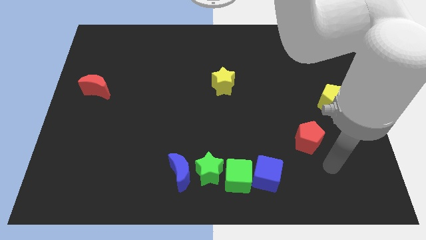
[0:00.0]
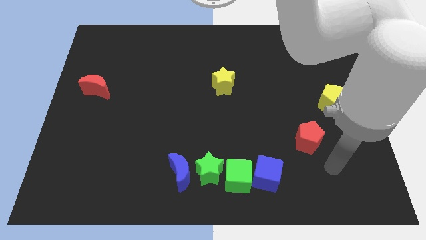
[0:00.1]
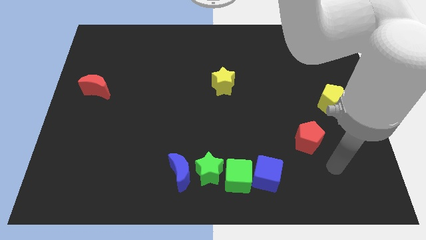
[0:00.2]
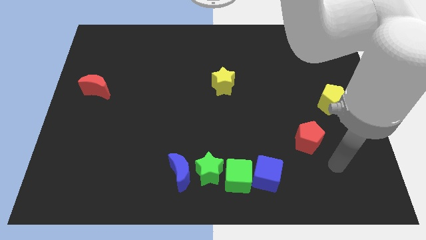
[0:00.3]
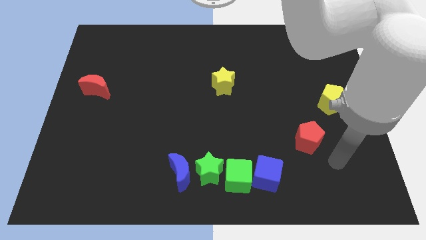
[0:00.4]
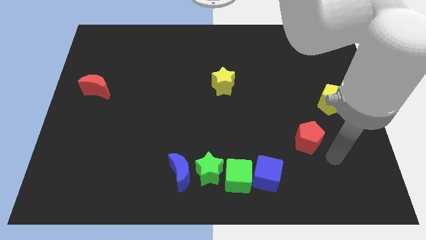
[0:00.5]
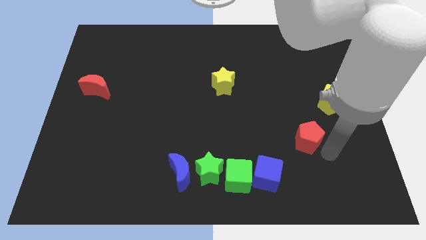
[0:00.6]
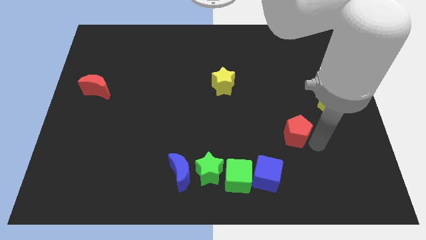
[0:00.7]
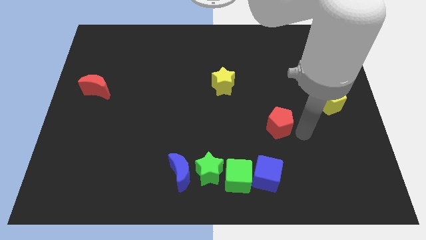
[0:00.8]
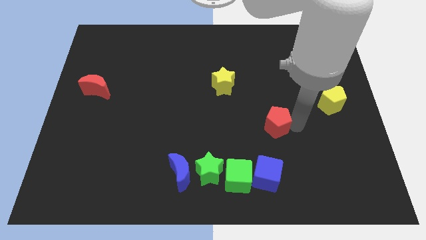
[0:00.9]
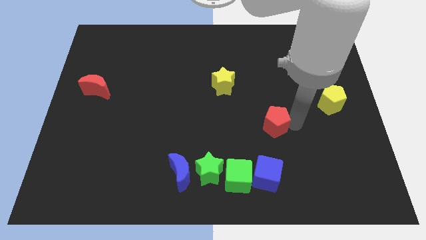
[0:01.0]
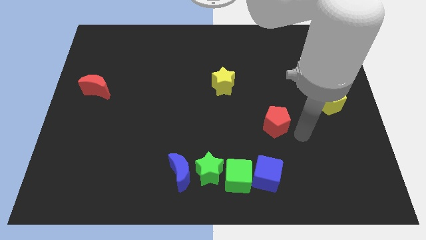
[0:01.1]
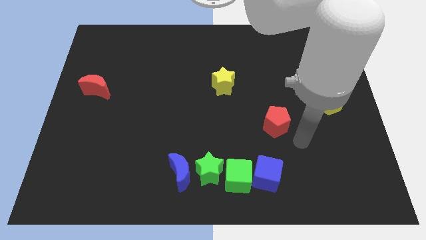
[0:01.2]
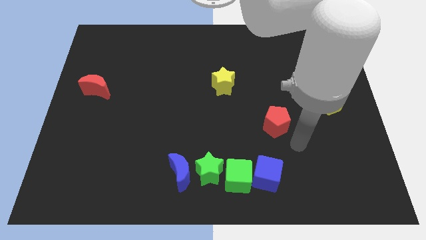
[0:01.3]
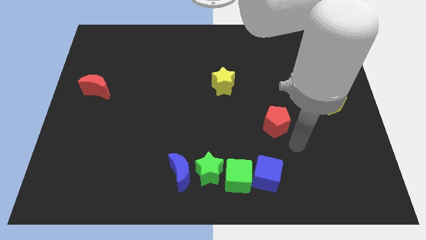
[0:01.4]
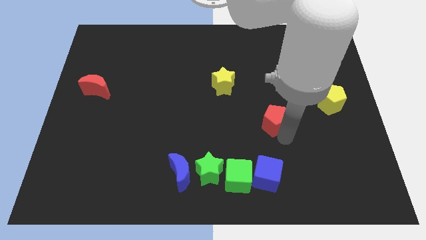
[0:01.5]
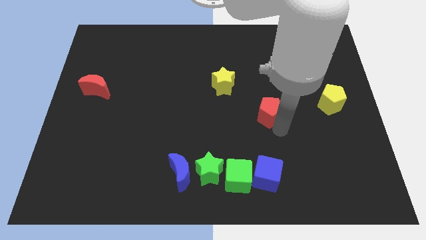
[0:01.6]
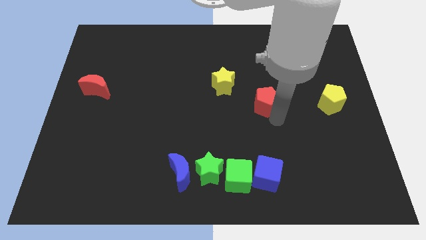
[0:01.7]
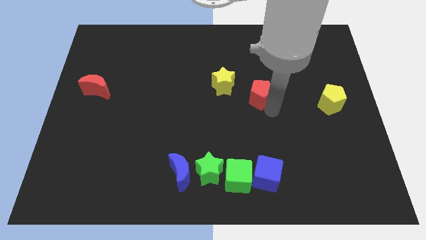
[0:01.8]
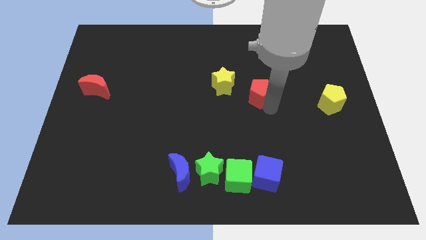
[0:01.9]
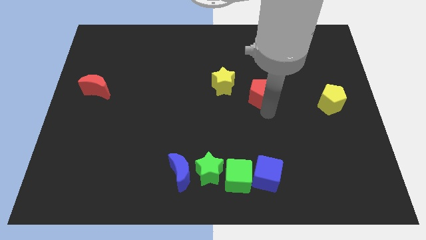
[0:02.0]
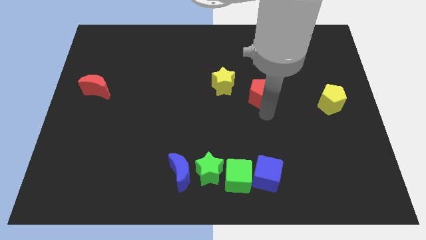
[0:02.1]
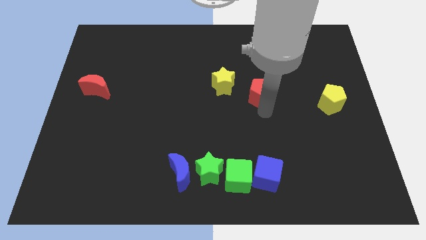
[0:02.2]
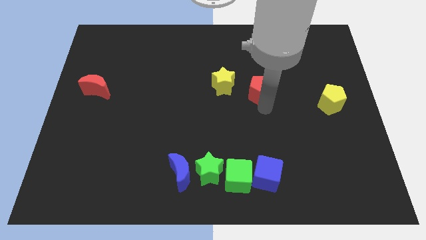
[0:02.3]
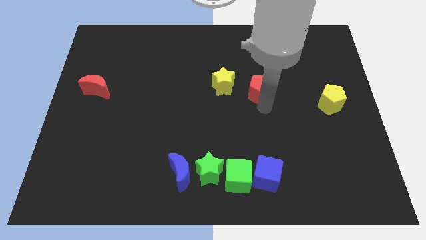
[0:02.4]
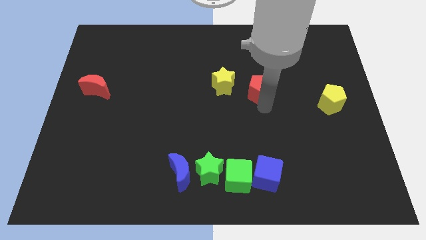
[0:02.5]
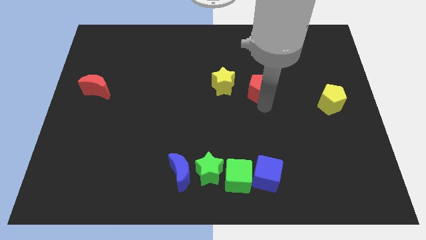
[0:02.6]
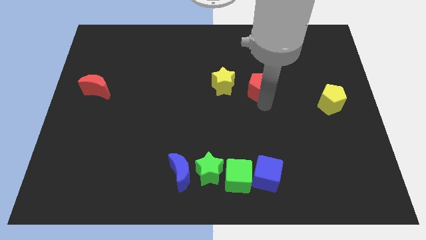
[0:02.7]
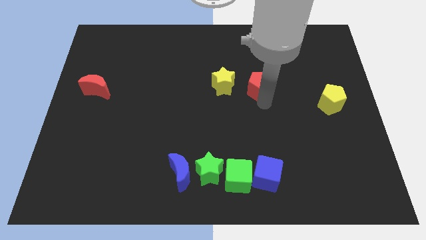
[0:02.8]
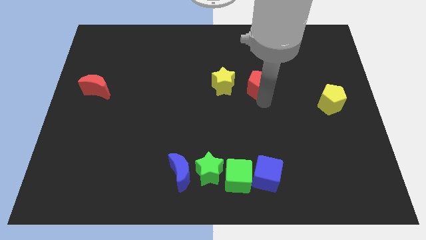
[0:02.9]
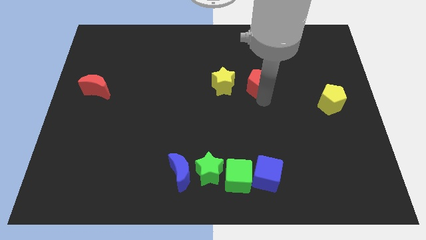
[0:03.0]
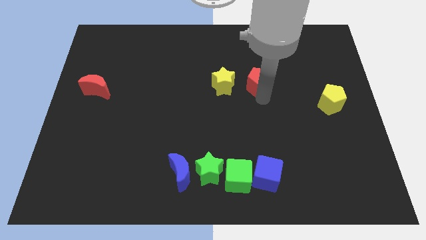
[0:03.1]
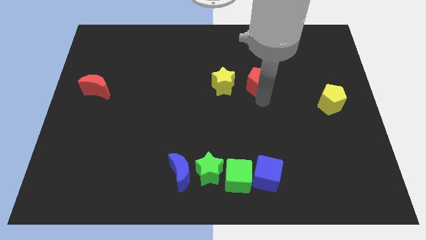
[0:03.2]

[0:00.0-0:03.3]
move the red pentagon to the right of the yellow star

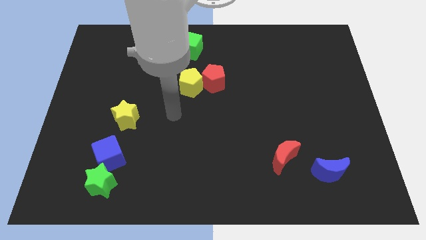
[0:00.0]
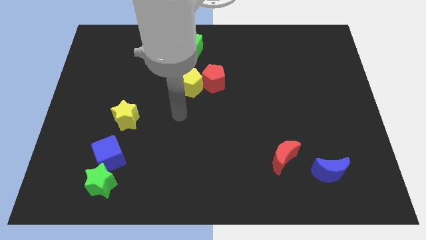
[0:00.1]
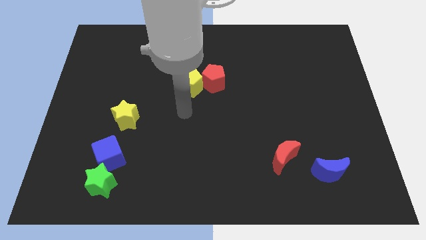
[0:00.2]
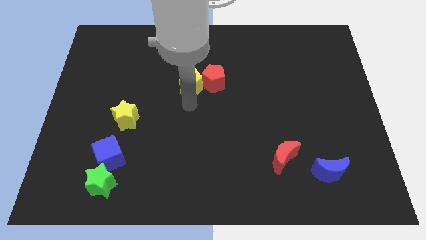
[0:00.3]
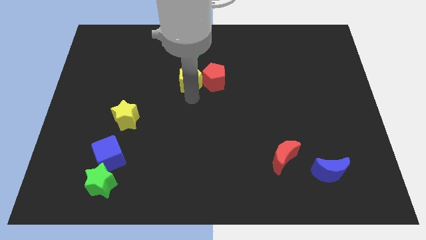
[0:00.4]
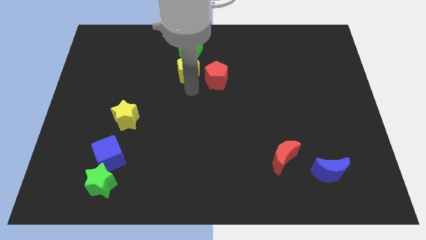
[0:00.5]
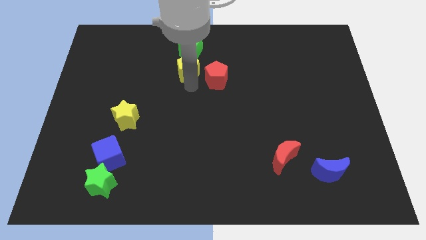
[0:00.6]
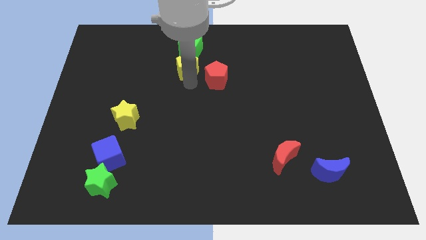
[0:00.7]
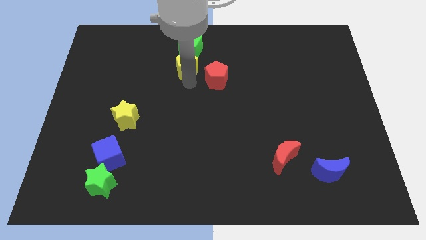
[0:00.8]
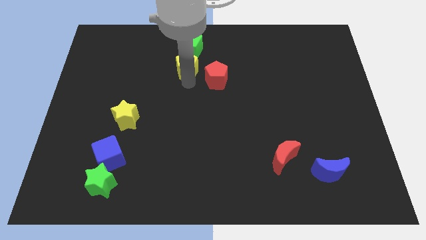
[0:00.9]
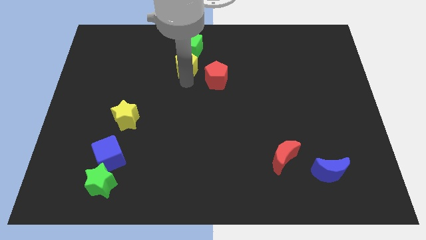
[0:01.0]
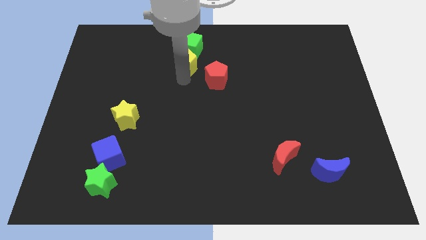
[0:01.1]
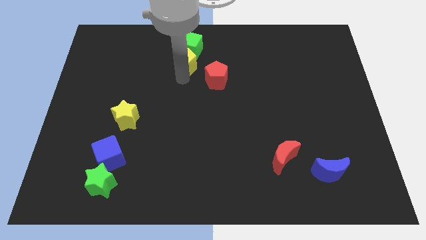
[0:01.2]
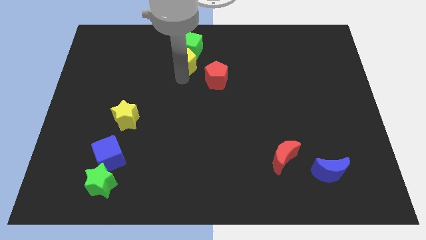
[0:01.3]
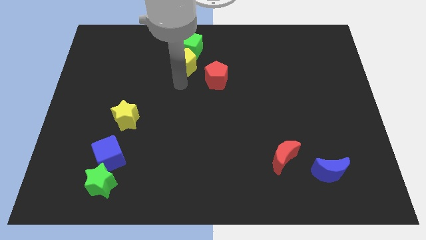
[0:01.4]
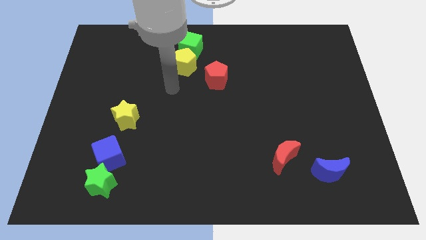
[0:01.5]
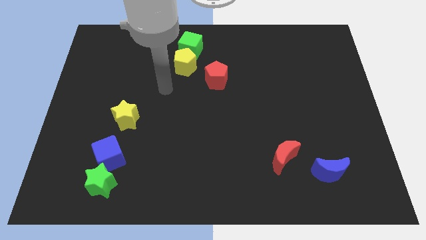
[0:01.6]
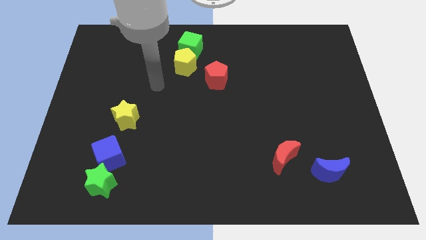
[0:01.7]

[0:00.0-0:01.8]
push yellow pentagon into the green cube

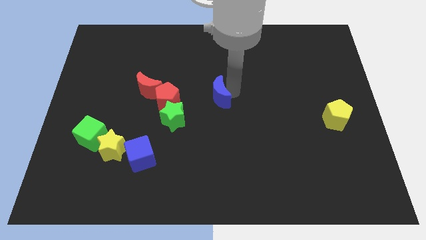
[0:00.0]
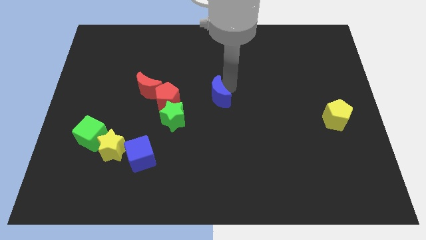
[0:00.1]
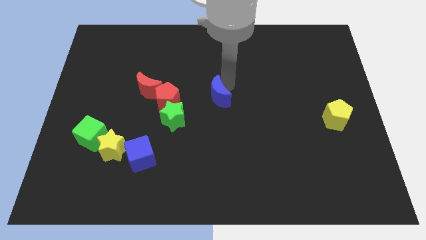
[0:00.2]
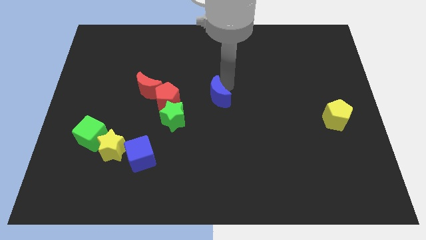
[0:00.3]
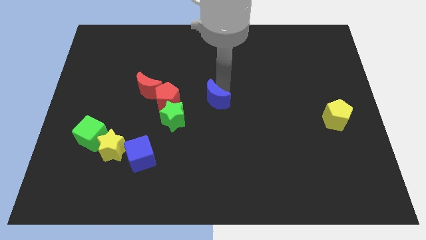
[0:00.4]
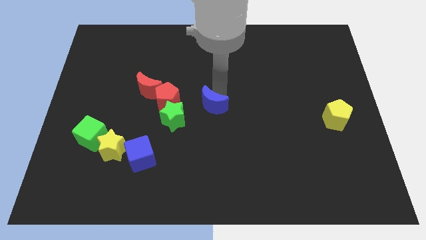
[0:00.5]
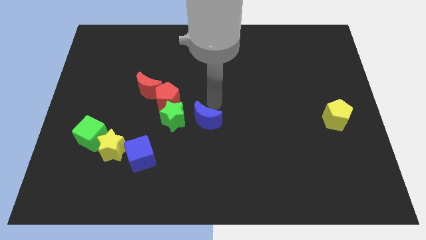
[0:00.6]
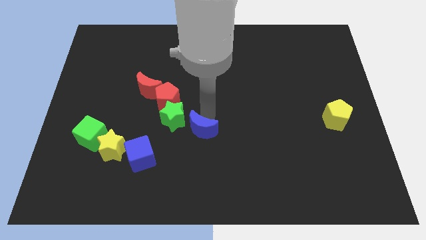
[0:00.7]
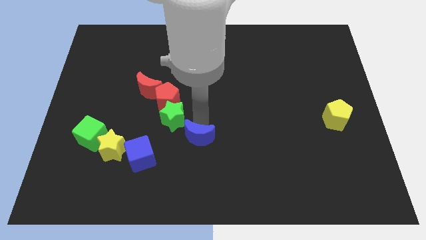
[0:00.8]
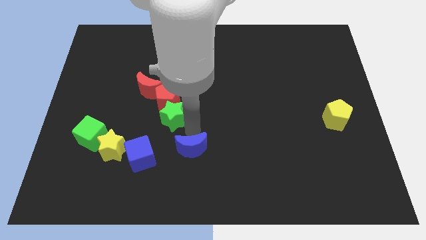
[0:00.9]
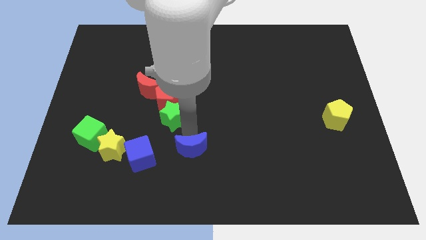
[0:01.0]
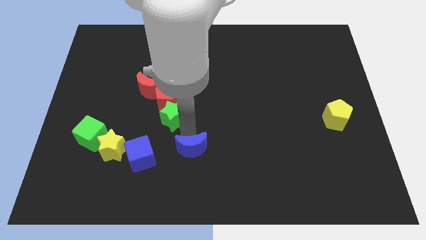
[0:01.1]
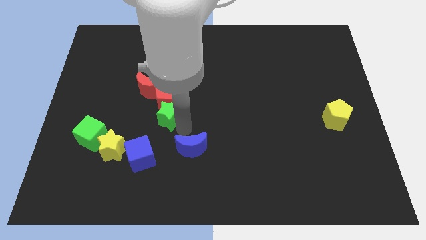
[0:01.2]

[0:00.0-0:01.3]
move the blue crescent to the right of the blue cube

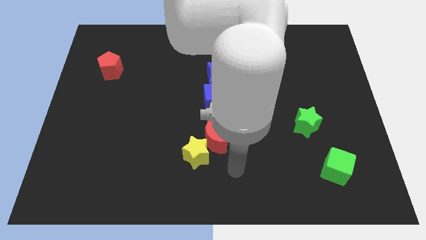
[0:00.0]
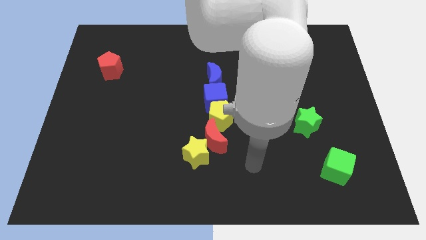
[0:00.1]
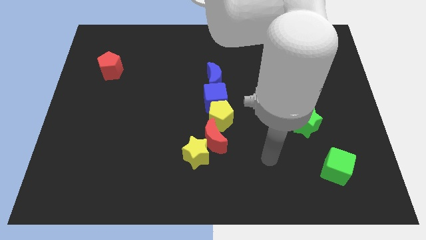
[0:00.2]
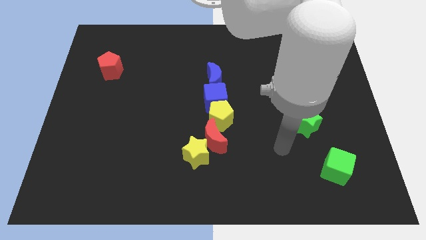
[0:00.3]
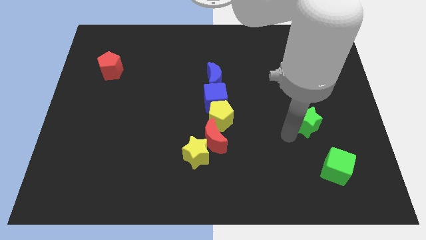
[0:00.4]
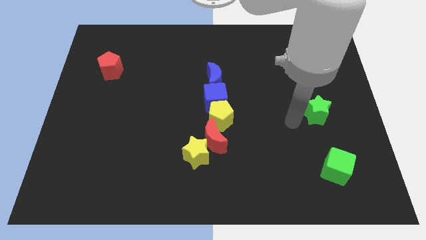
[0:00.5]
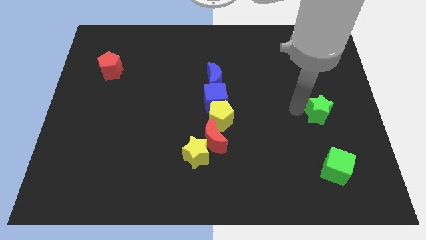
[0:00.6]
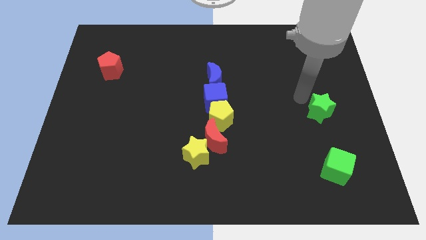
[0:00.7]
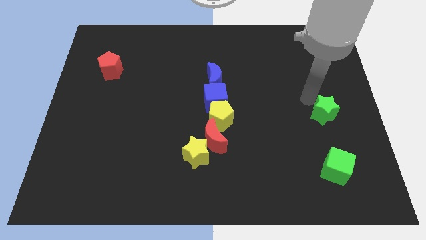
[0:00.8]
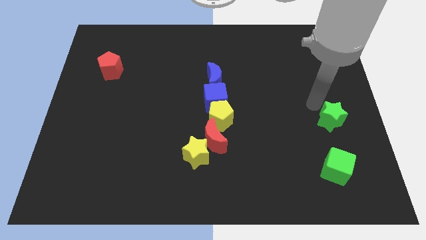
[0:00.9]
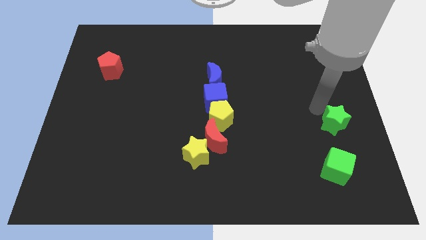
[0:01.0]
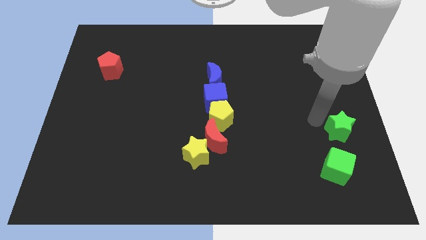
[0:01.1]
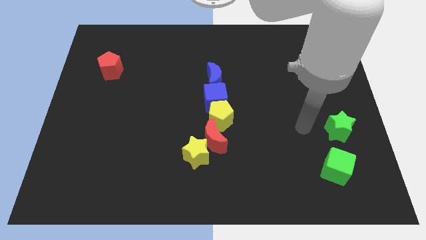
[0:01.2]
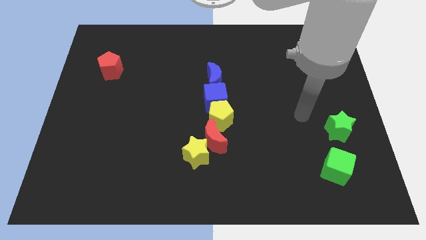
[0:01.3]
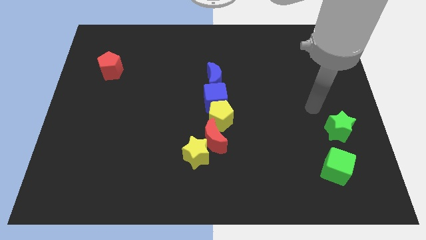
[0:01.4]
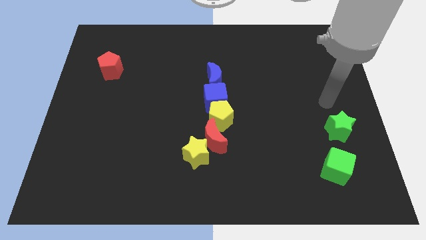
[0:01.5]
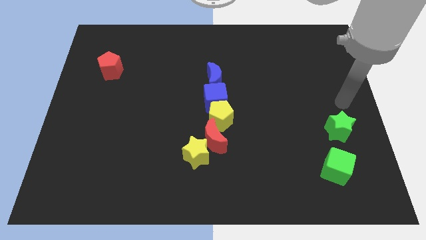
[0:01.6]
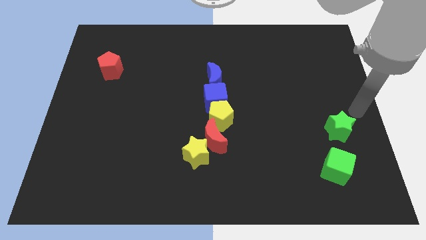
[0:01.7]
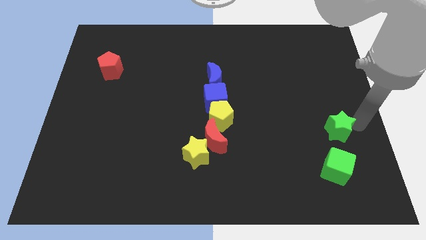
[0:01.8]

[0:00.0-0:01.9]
push the green star above green cube

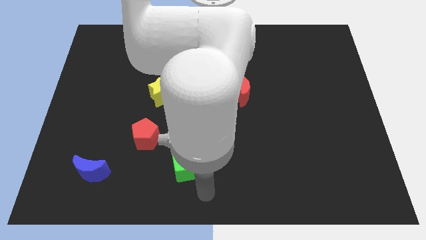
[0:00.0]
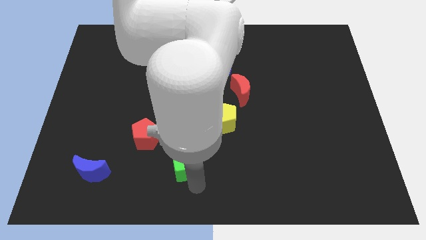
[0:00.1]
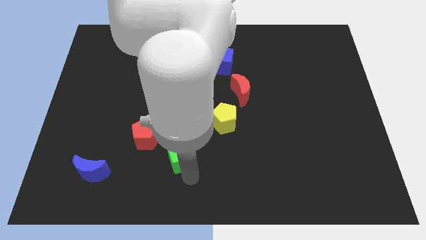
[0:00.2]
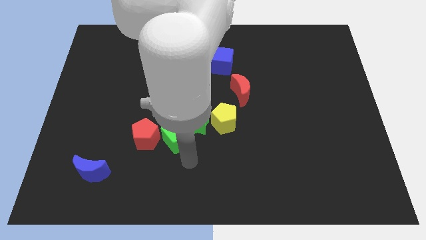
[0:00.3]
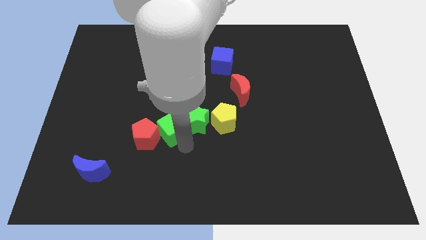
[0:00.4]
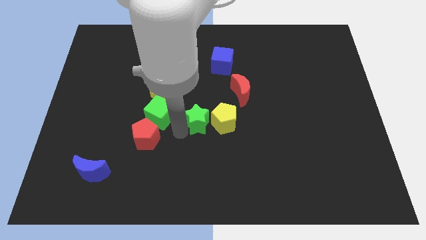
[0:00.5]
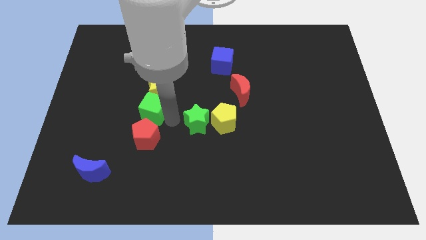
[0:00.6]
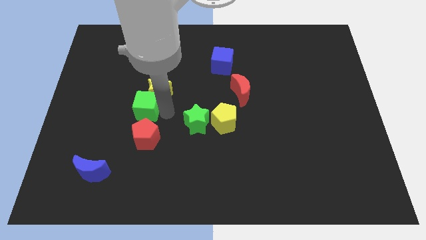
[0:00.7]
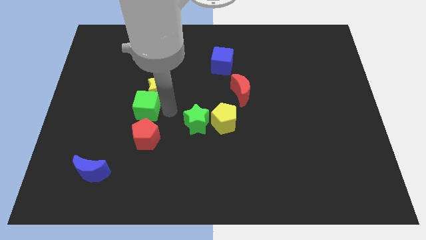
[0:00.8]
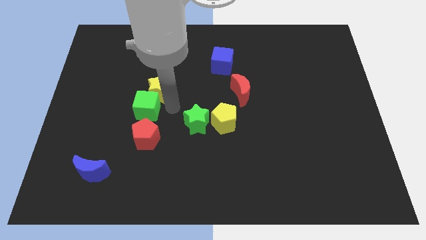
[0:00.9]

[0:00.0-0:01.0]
place green cube above red pentagon
